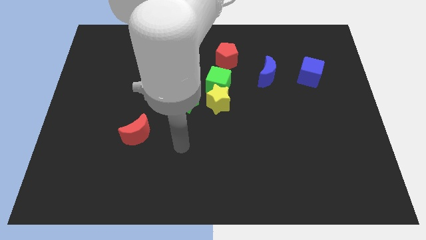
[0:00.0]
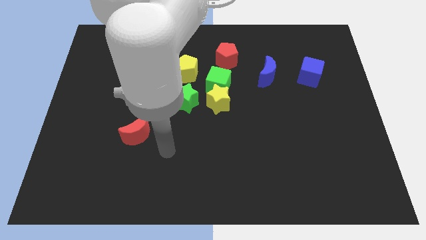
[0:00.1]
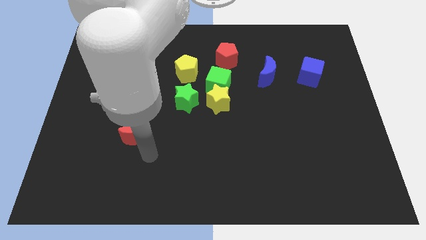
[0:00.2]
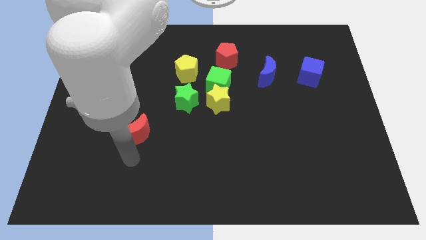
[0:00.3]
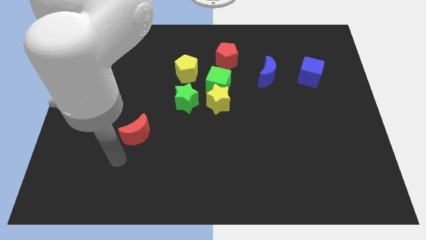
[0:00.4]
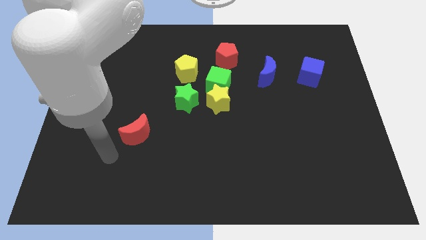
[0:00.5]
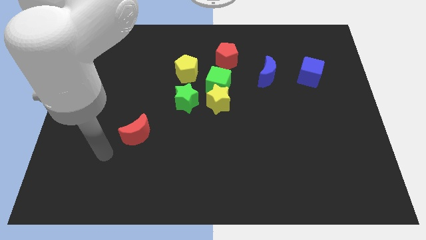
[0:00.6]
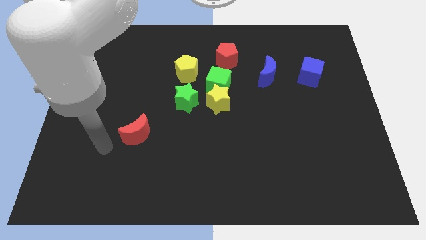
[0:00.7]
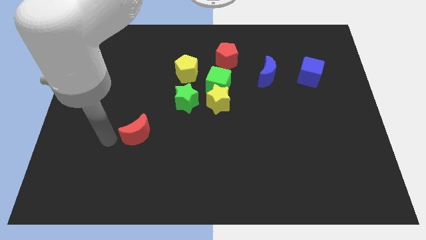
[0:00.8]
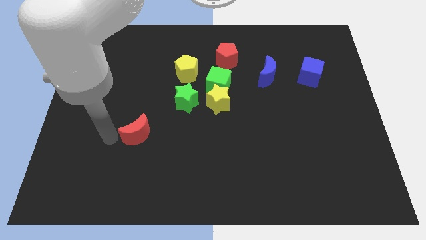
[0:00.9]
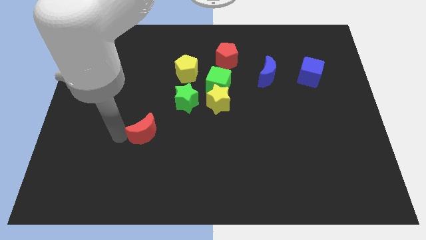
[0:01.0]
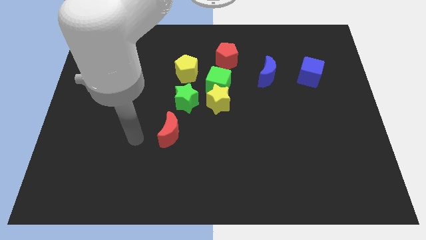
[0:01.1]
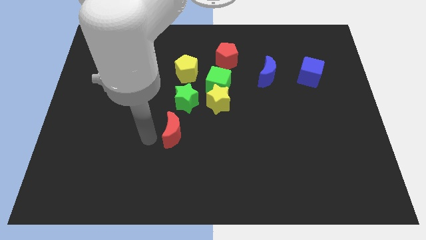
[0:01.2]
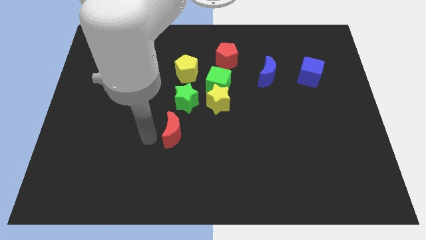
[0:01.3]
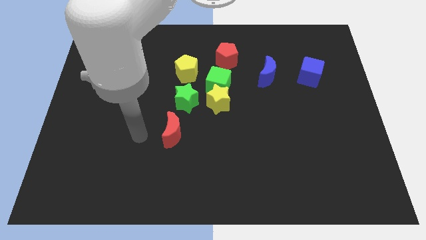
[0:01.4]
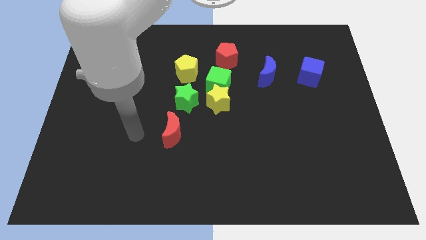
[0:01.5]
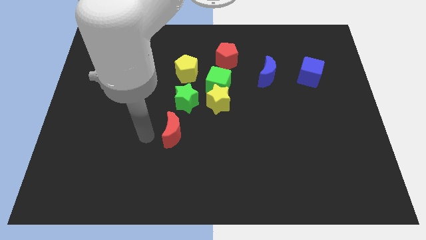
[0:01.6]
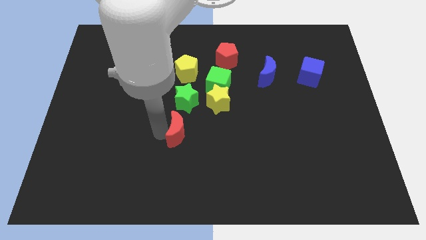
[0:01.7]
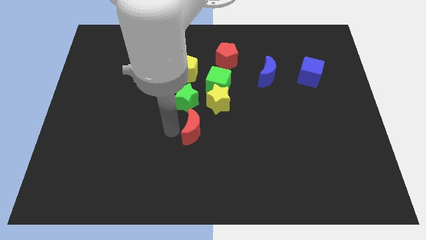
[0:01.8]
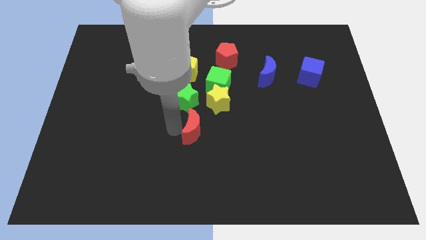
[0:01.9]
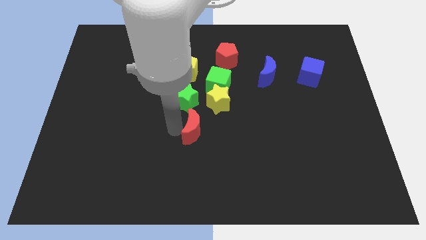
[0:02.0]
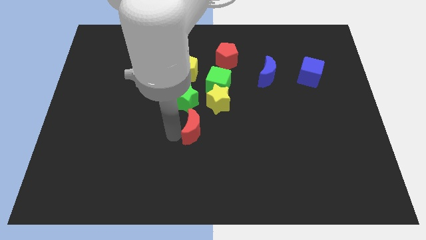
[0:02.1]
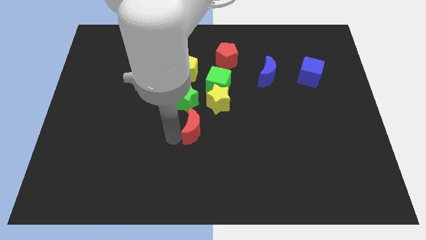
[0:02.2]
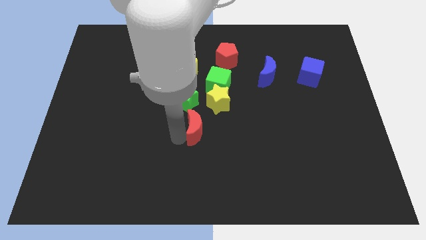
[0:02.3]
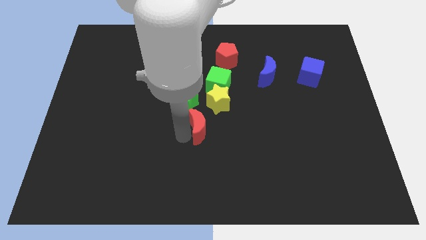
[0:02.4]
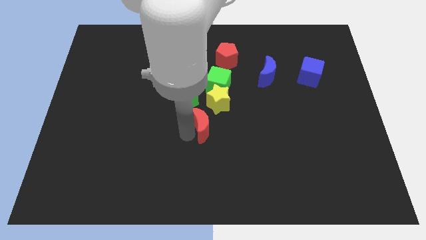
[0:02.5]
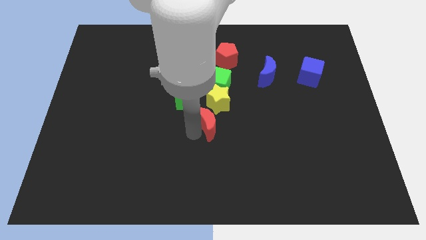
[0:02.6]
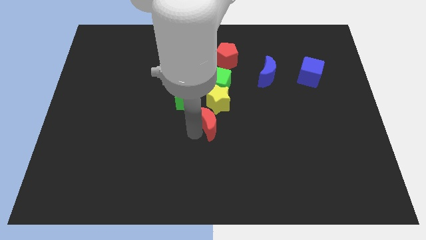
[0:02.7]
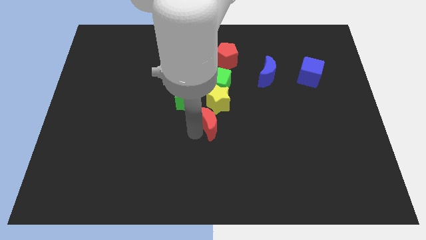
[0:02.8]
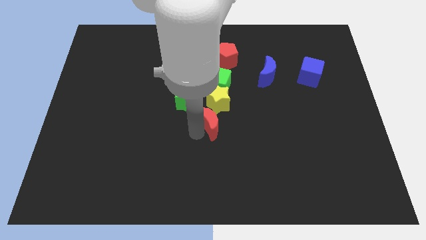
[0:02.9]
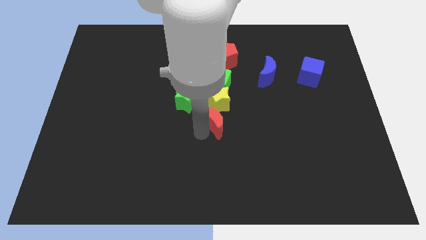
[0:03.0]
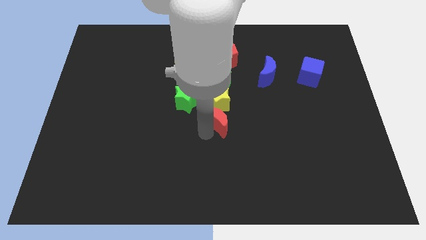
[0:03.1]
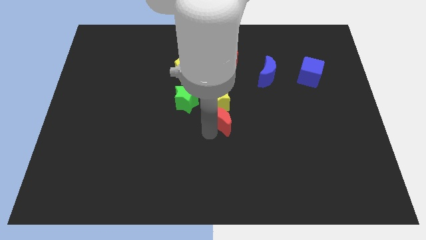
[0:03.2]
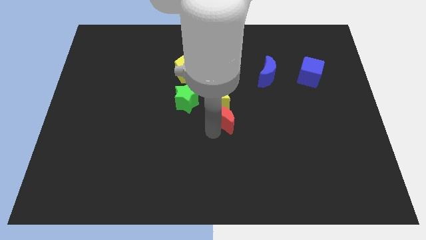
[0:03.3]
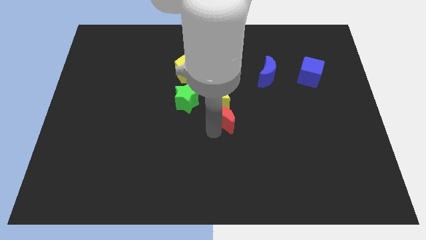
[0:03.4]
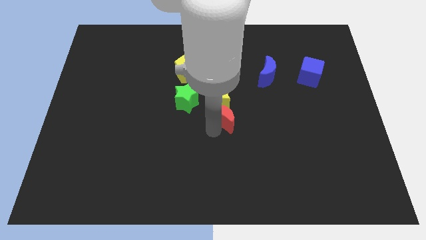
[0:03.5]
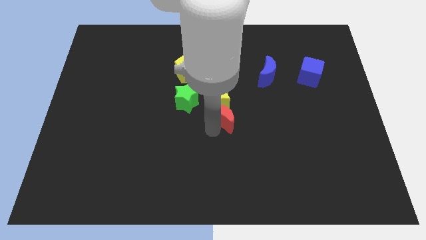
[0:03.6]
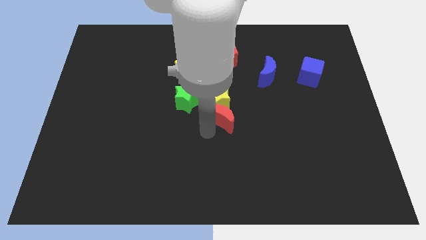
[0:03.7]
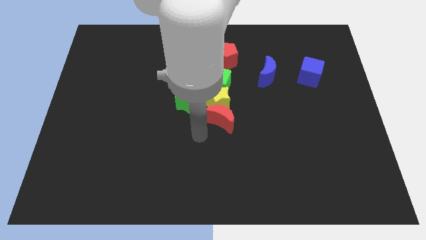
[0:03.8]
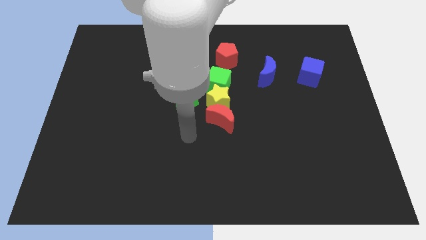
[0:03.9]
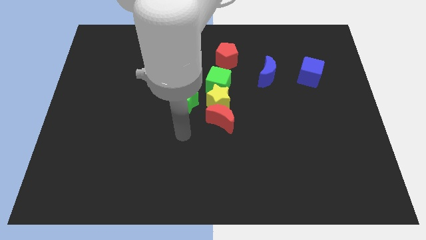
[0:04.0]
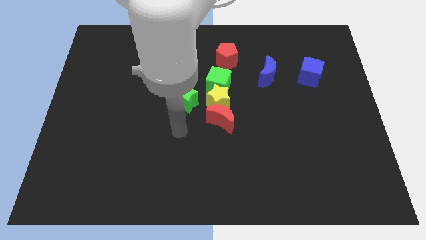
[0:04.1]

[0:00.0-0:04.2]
slide red moon close to yellow star

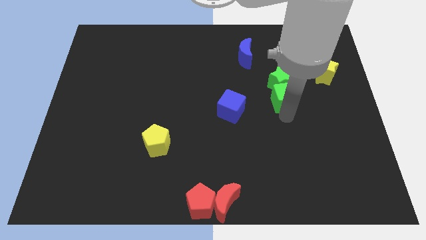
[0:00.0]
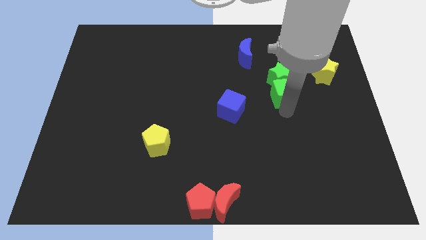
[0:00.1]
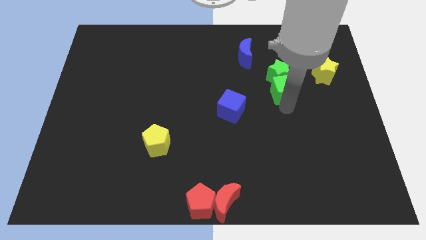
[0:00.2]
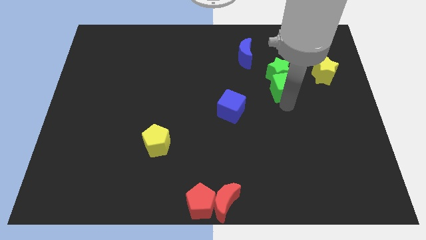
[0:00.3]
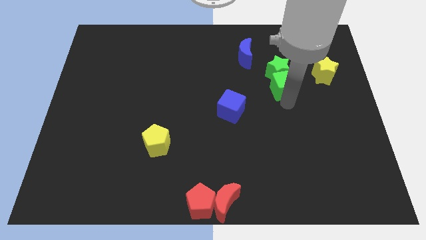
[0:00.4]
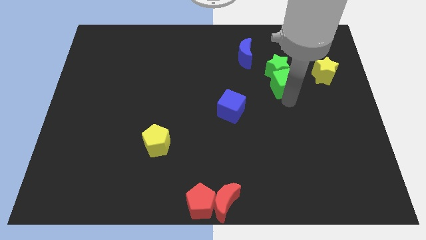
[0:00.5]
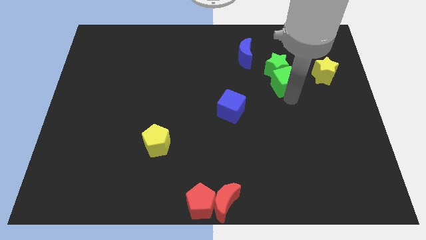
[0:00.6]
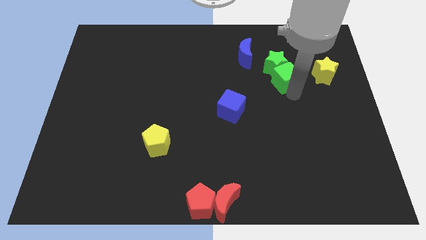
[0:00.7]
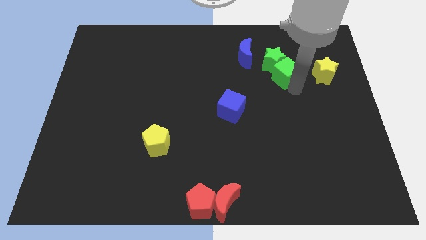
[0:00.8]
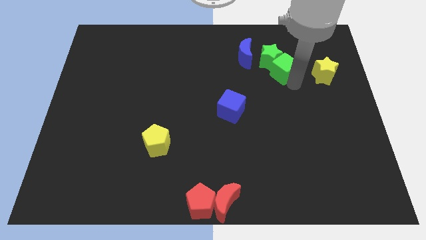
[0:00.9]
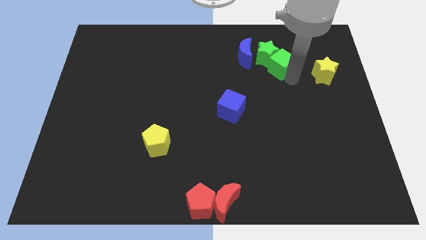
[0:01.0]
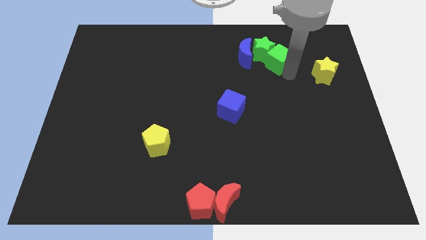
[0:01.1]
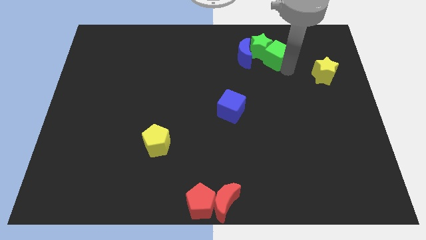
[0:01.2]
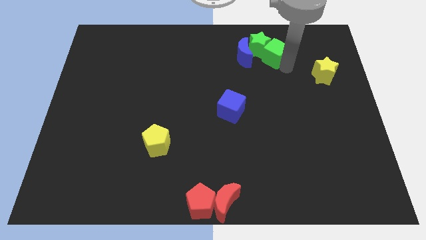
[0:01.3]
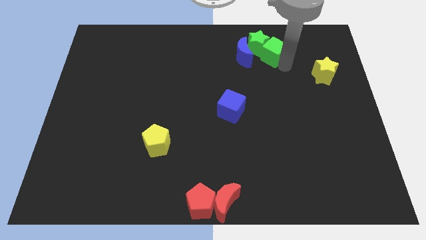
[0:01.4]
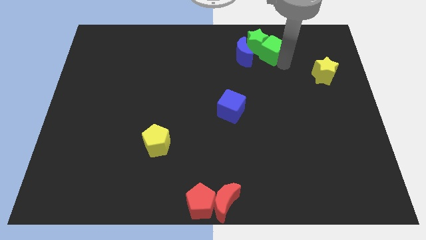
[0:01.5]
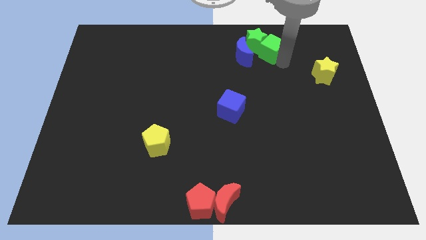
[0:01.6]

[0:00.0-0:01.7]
push the green blocks into the blue moon

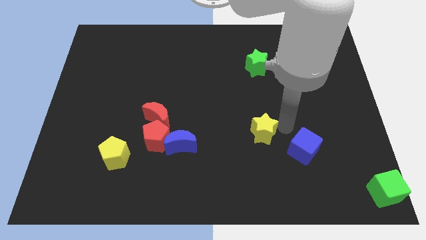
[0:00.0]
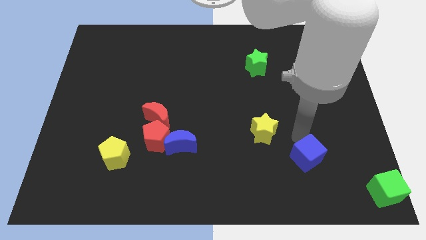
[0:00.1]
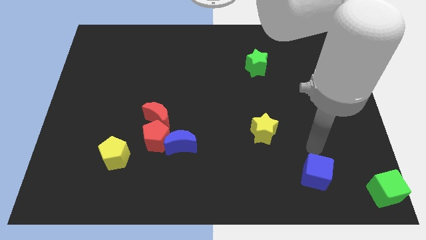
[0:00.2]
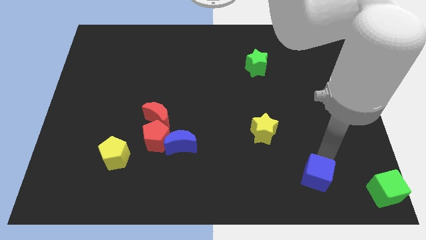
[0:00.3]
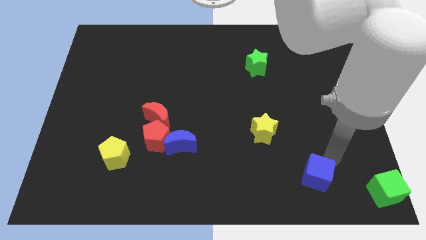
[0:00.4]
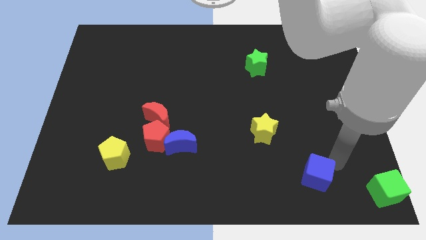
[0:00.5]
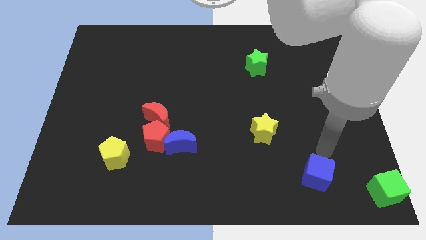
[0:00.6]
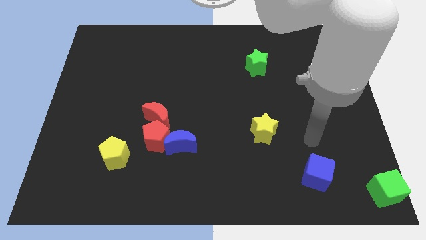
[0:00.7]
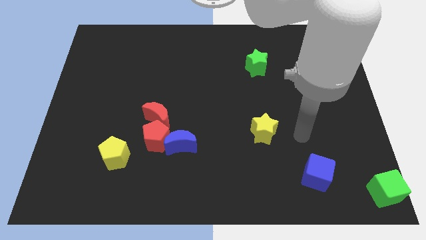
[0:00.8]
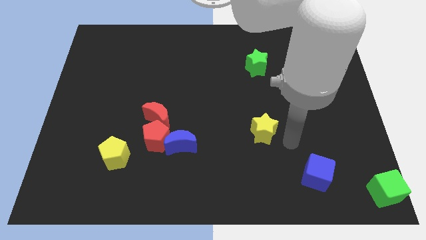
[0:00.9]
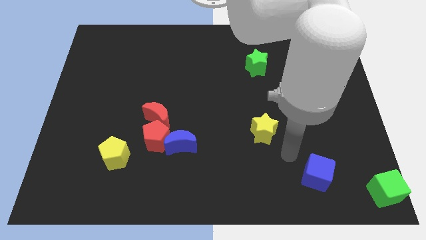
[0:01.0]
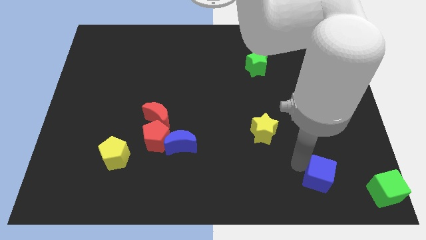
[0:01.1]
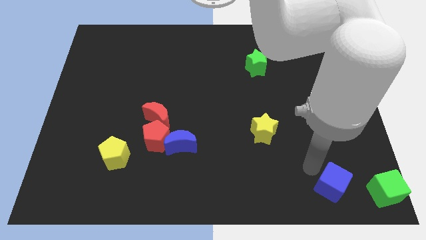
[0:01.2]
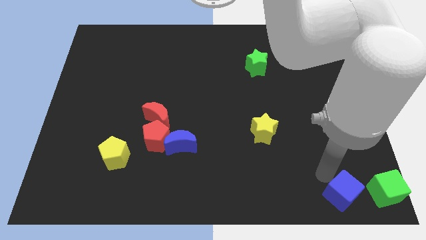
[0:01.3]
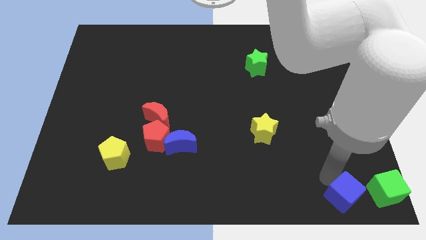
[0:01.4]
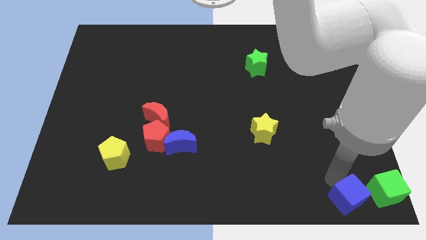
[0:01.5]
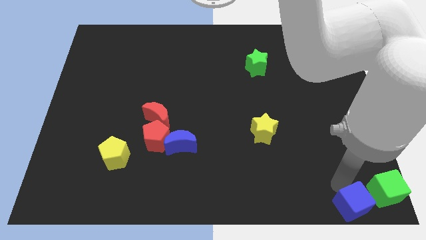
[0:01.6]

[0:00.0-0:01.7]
place the blue cube to the left of the green cube

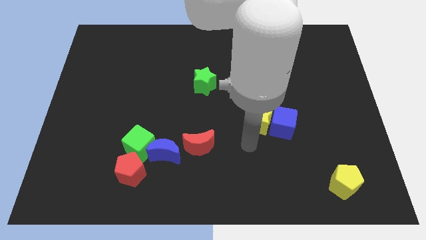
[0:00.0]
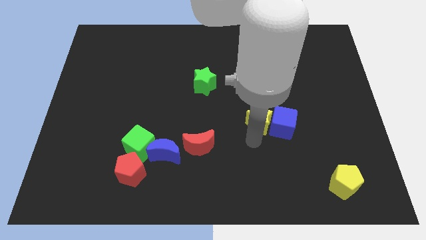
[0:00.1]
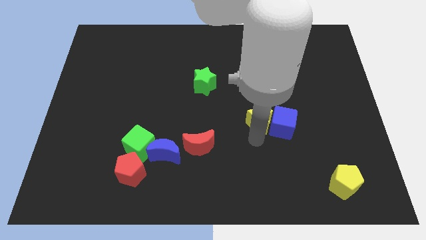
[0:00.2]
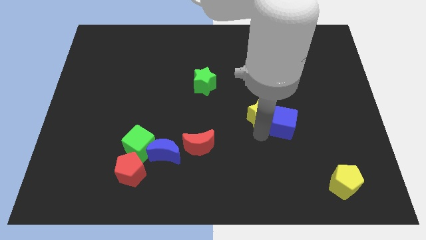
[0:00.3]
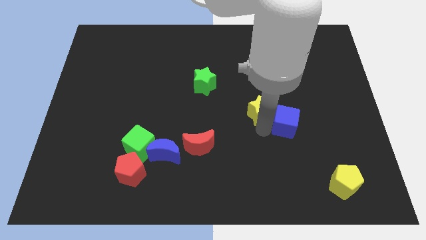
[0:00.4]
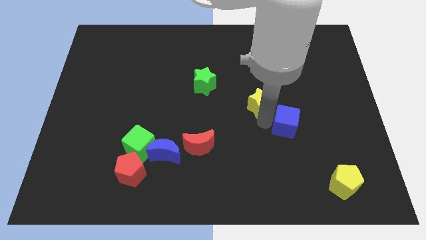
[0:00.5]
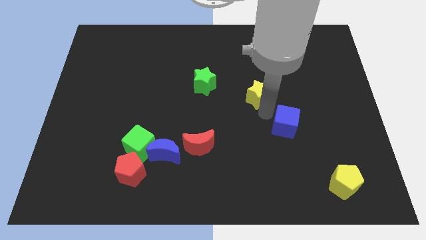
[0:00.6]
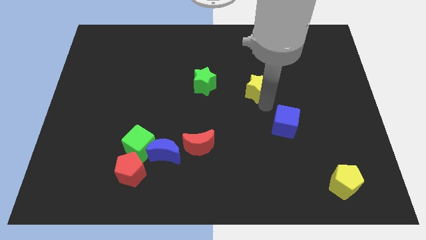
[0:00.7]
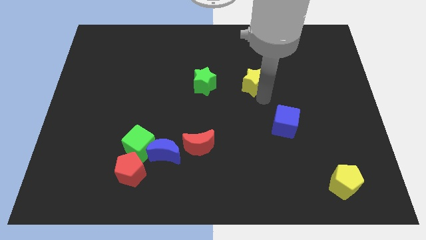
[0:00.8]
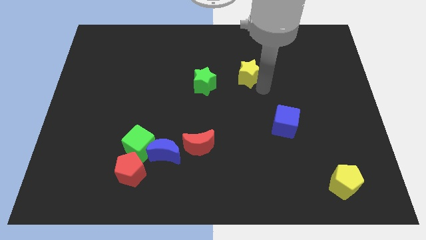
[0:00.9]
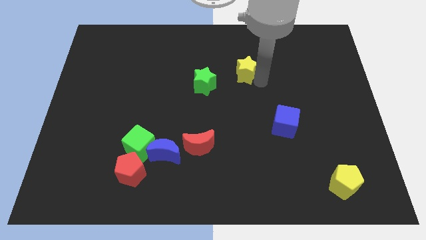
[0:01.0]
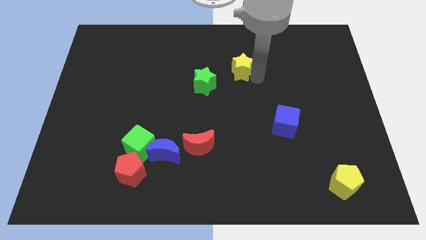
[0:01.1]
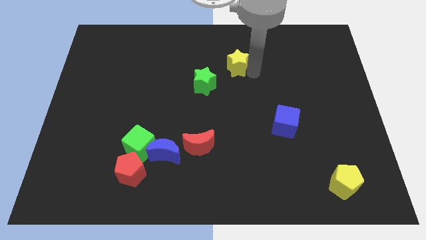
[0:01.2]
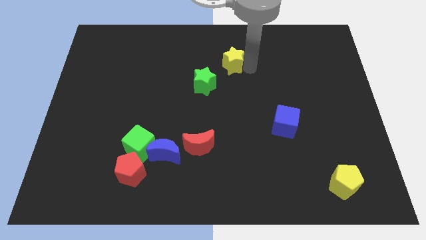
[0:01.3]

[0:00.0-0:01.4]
separate the yellow star from the blue cube
